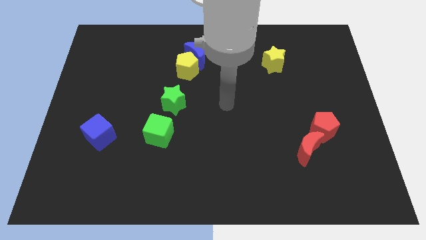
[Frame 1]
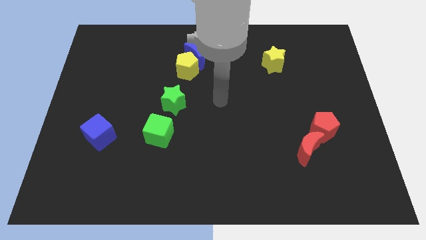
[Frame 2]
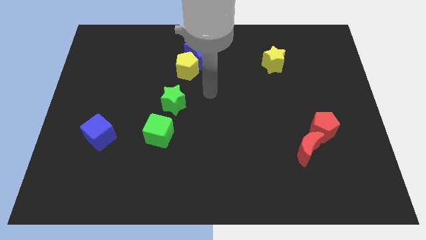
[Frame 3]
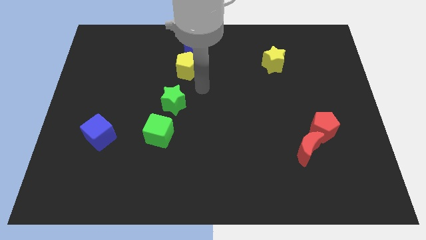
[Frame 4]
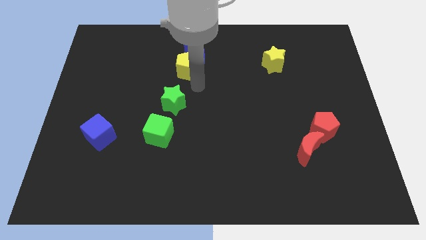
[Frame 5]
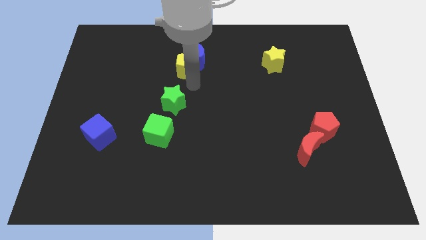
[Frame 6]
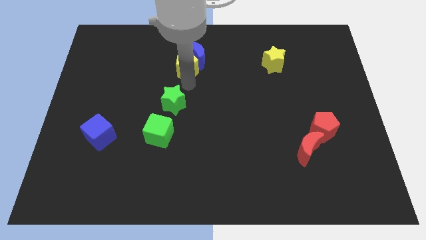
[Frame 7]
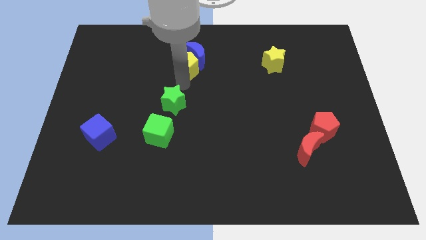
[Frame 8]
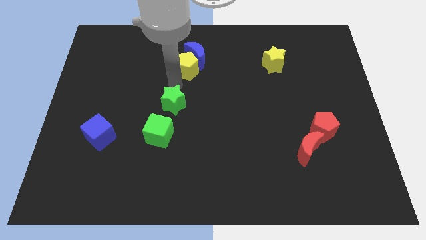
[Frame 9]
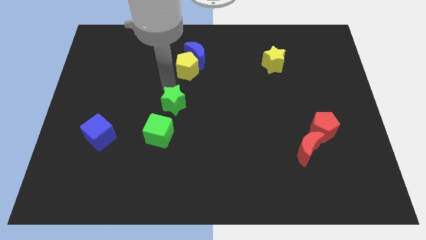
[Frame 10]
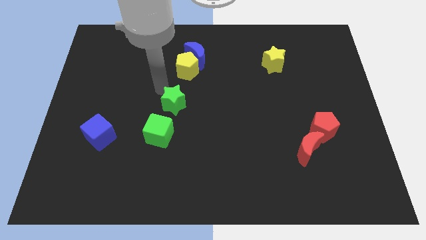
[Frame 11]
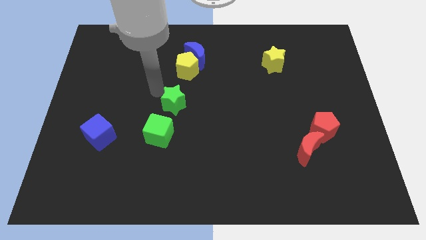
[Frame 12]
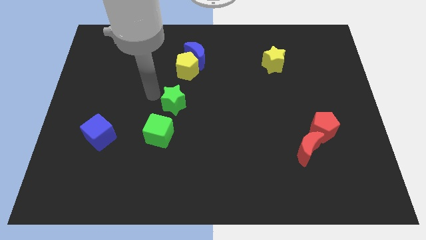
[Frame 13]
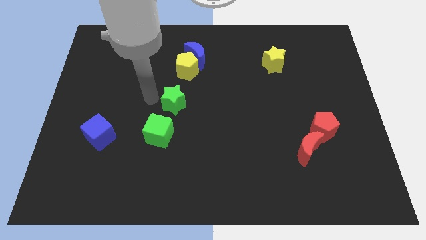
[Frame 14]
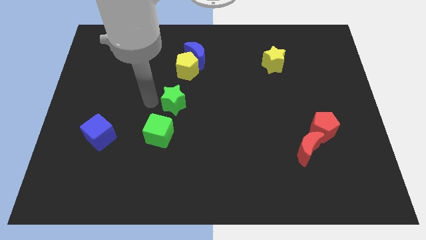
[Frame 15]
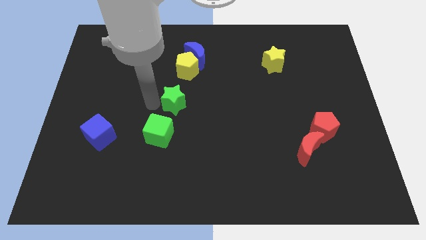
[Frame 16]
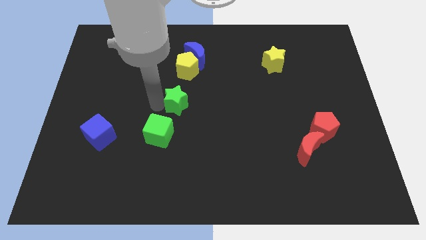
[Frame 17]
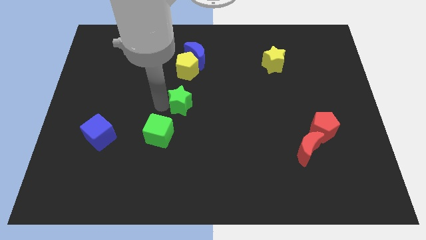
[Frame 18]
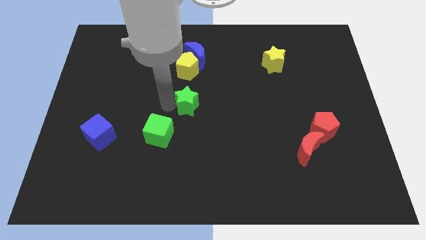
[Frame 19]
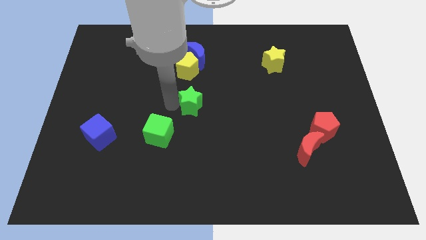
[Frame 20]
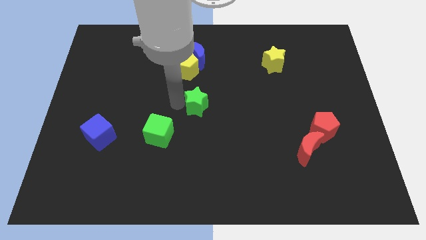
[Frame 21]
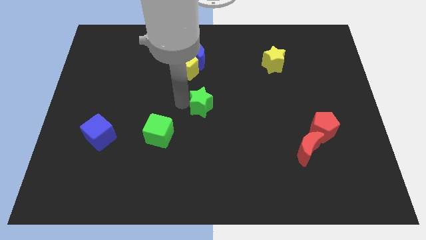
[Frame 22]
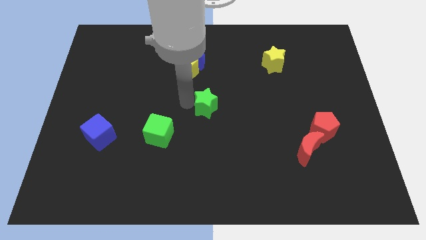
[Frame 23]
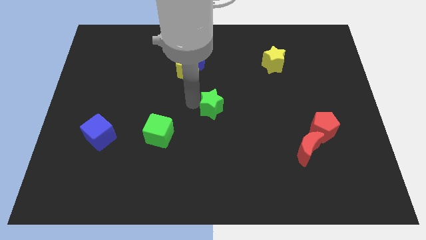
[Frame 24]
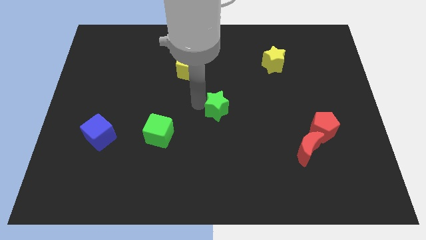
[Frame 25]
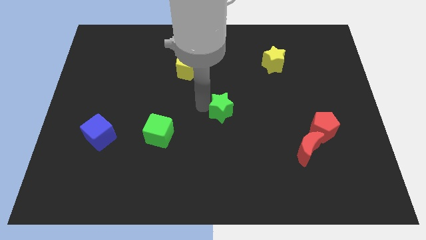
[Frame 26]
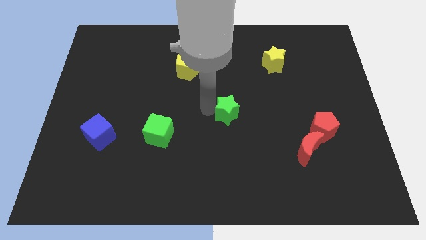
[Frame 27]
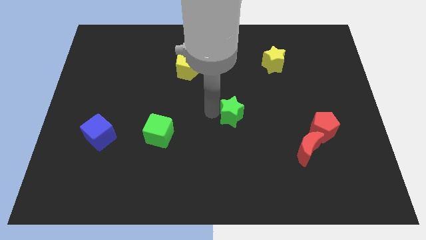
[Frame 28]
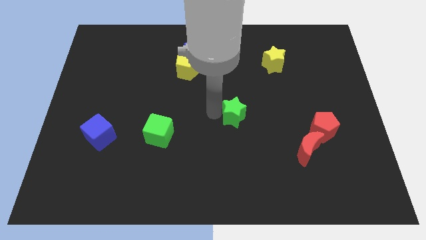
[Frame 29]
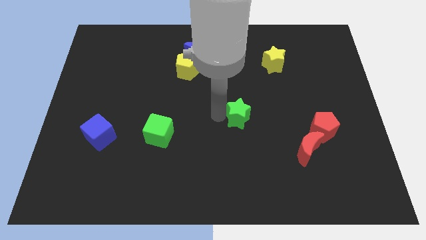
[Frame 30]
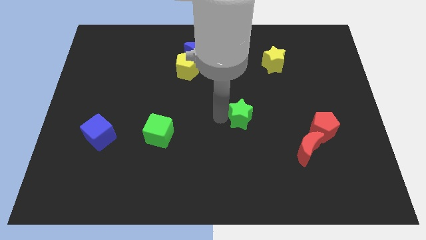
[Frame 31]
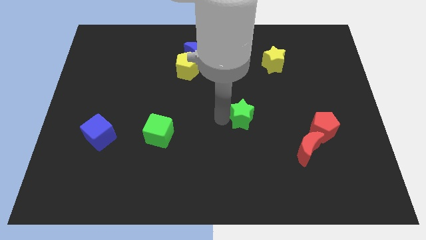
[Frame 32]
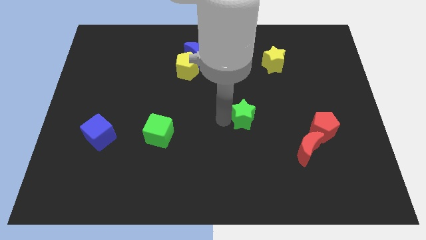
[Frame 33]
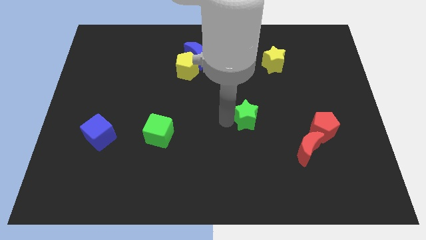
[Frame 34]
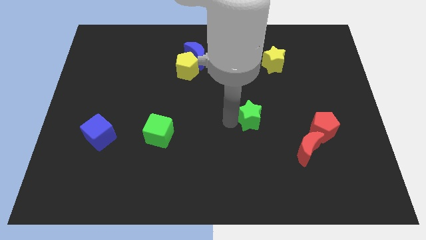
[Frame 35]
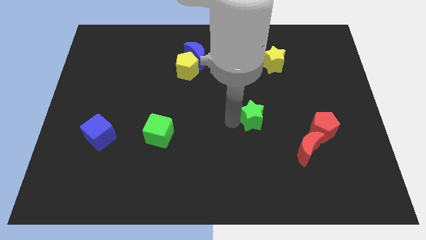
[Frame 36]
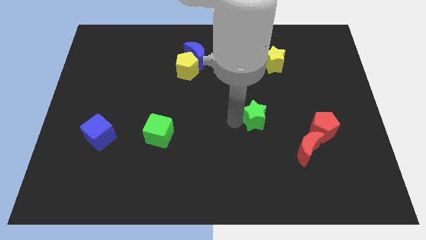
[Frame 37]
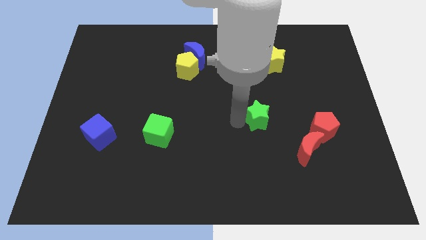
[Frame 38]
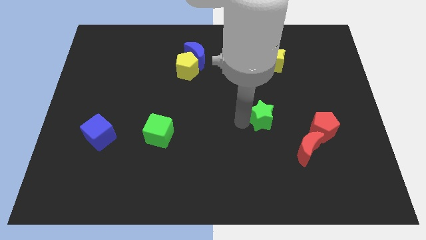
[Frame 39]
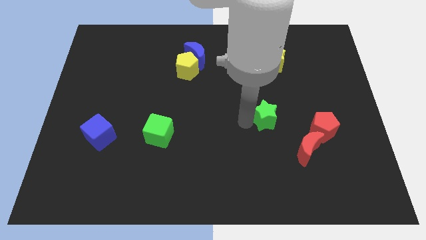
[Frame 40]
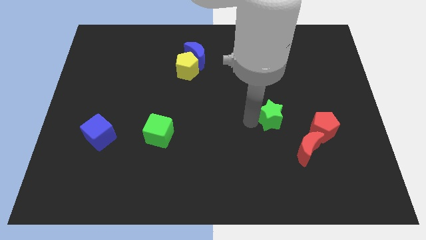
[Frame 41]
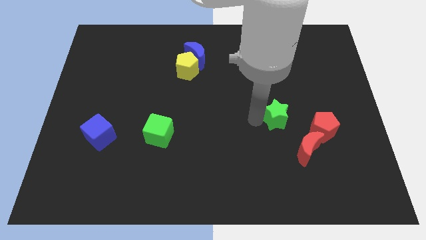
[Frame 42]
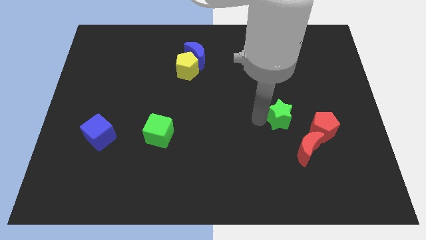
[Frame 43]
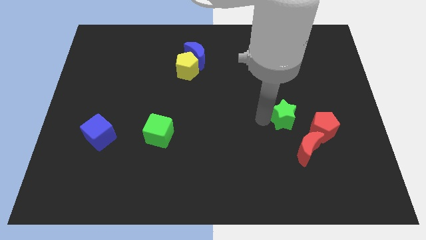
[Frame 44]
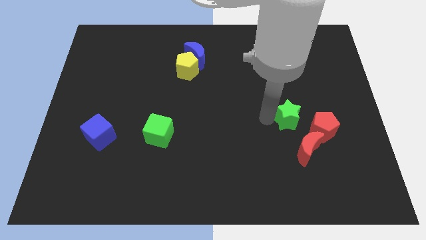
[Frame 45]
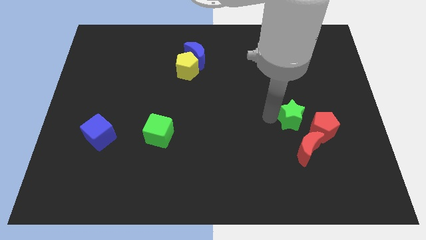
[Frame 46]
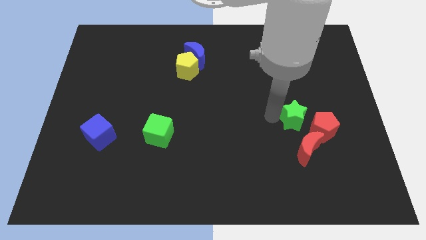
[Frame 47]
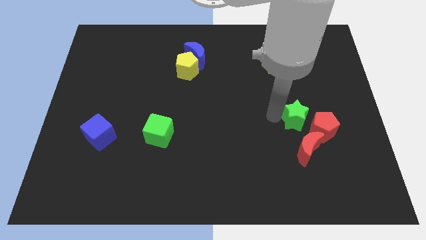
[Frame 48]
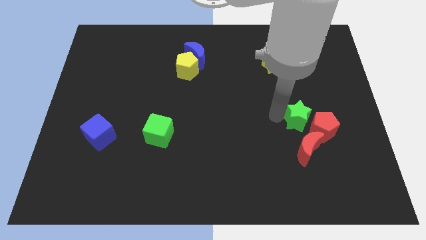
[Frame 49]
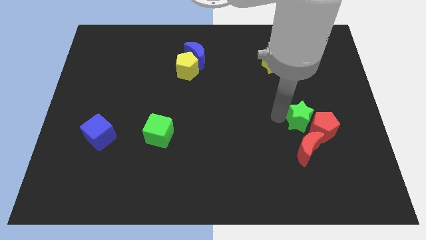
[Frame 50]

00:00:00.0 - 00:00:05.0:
move the green star to the red pentagon

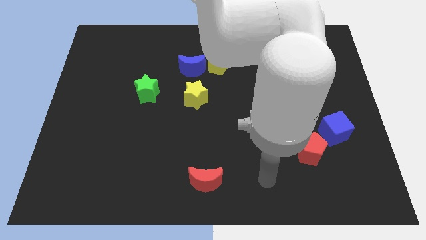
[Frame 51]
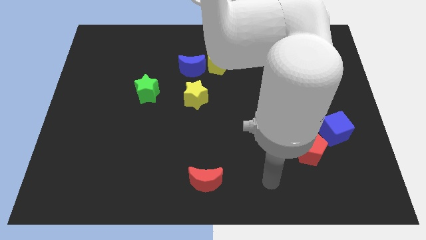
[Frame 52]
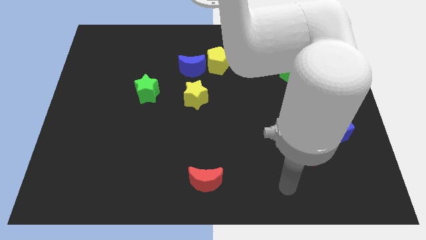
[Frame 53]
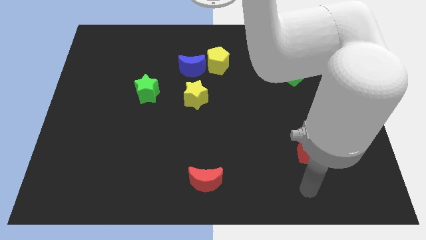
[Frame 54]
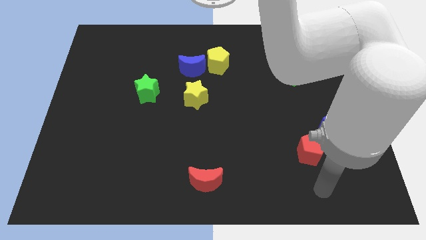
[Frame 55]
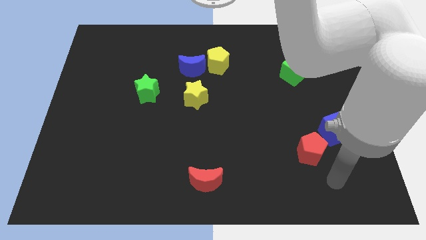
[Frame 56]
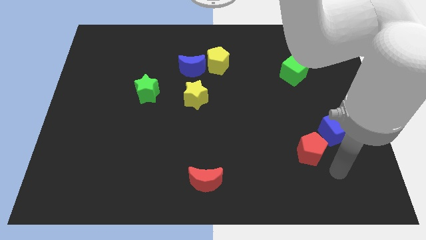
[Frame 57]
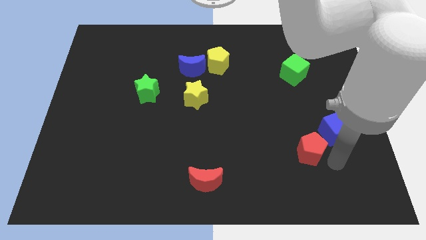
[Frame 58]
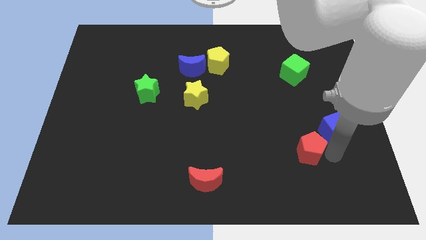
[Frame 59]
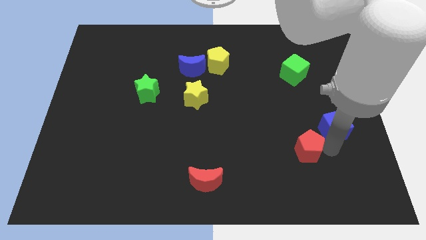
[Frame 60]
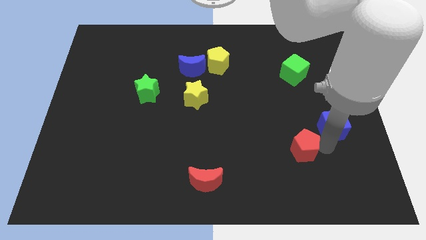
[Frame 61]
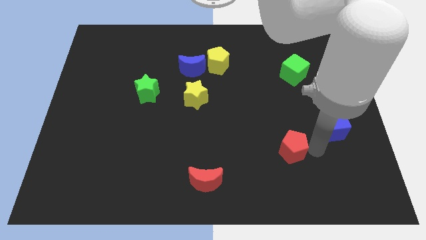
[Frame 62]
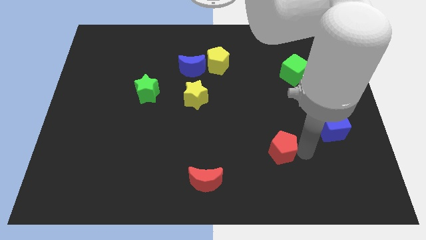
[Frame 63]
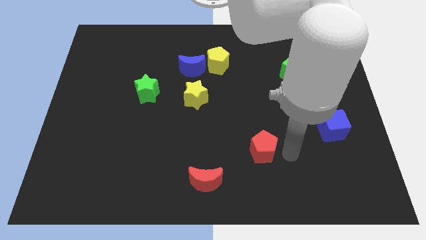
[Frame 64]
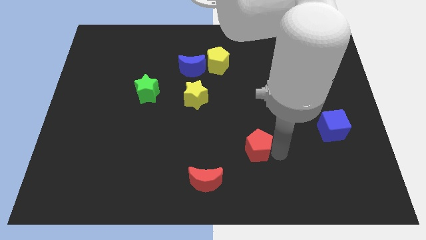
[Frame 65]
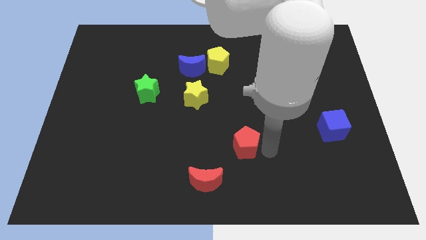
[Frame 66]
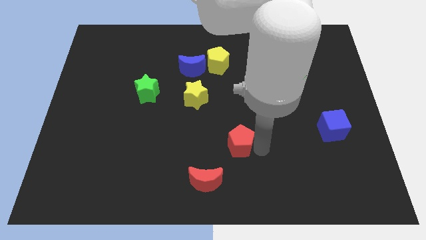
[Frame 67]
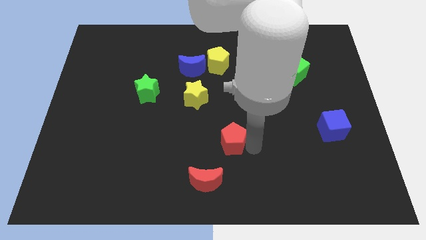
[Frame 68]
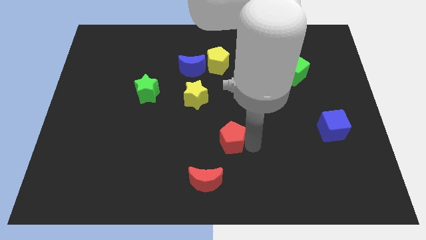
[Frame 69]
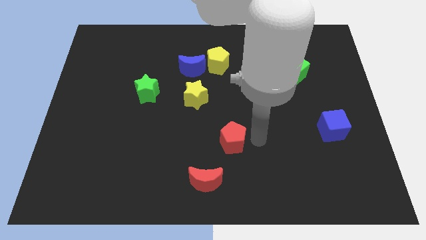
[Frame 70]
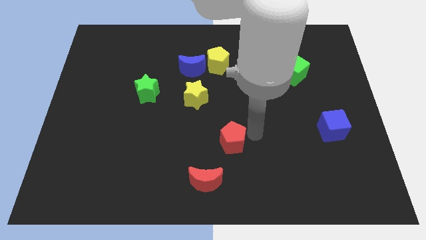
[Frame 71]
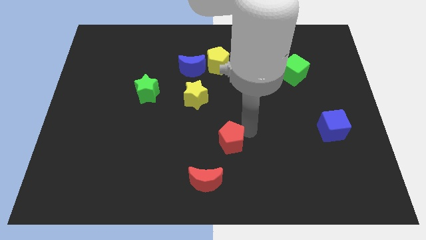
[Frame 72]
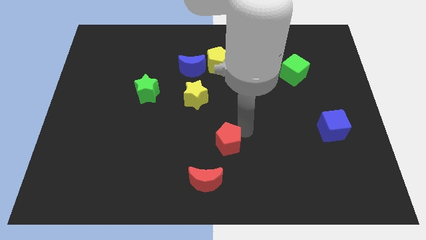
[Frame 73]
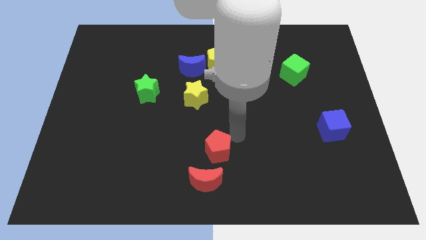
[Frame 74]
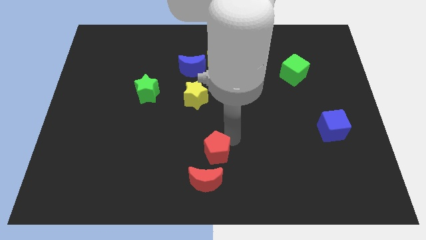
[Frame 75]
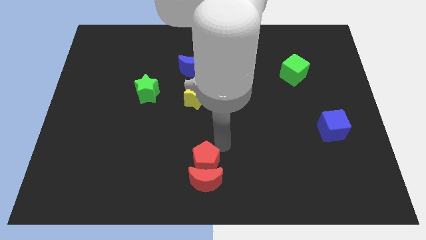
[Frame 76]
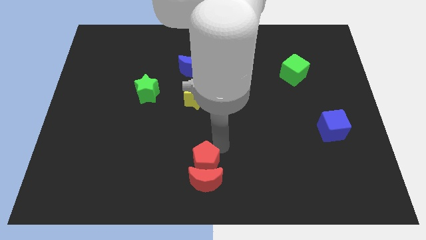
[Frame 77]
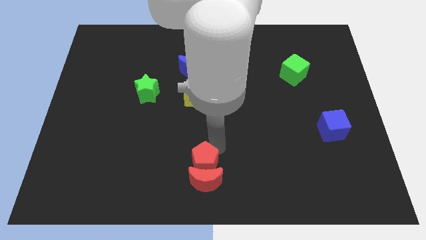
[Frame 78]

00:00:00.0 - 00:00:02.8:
push the red pentagon towards the red moon

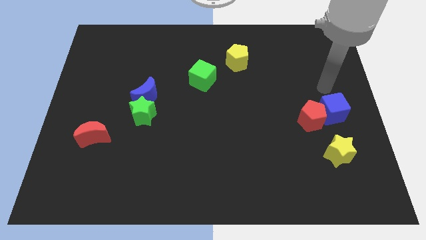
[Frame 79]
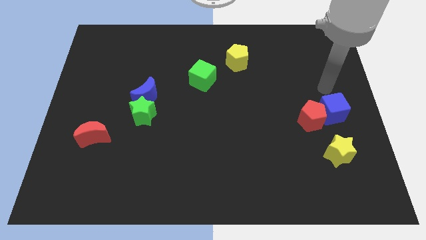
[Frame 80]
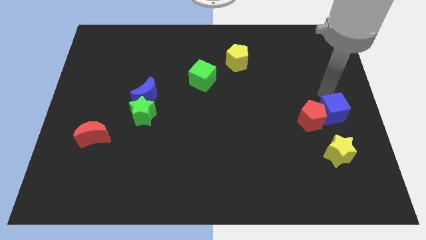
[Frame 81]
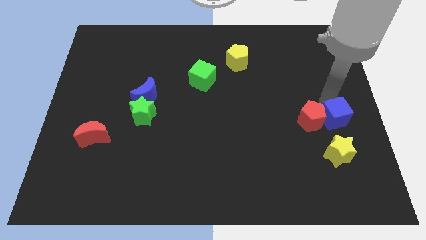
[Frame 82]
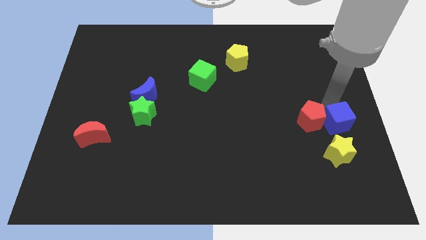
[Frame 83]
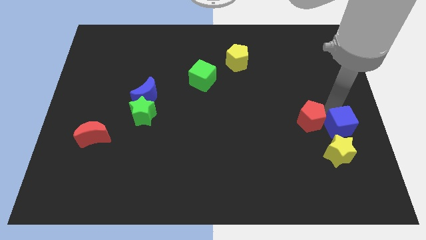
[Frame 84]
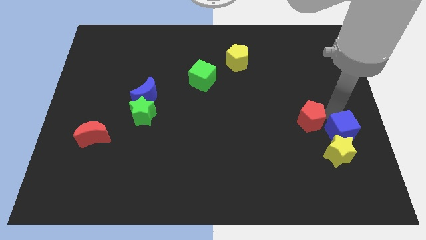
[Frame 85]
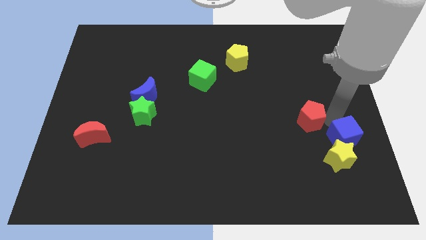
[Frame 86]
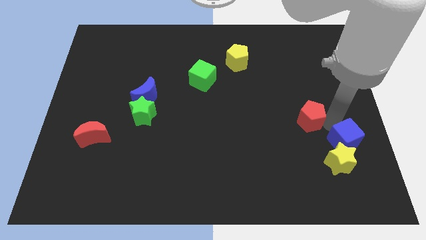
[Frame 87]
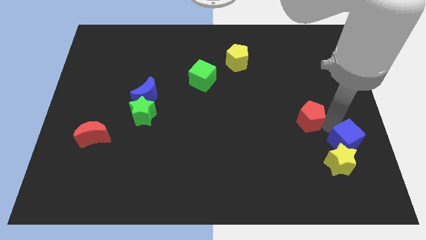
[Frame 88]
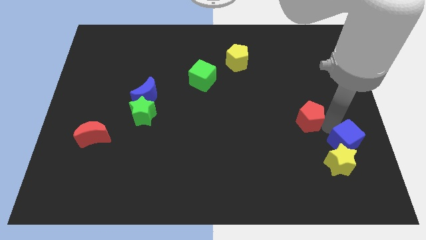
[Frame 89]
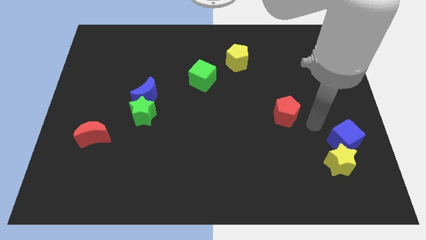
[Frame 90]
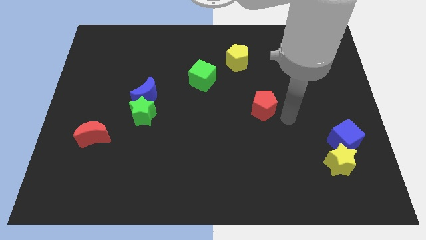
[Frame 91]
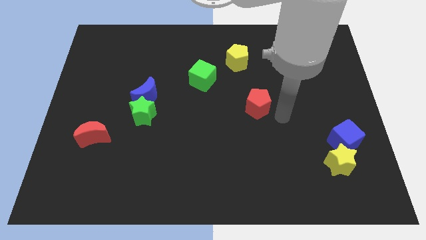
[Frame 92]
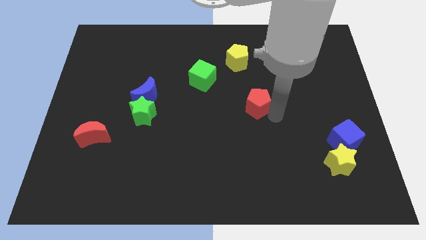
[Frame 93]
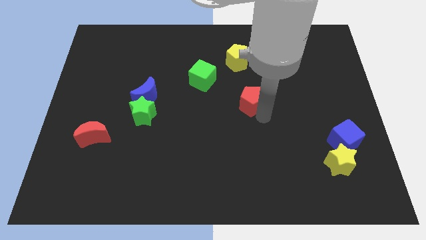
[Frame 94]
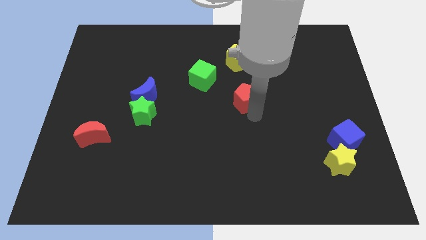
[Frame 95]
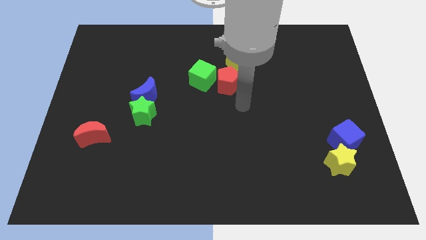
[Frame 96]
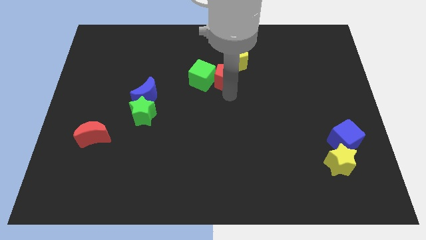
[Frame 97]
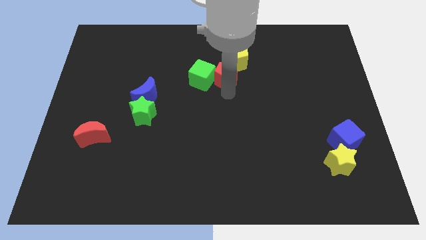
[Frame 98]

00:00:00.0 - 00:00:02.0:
slide the red pentagon close to the green cube
